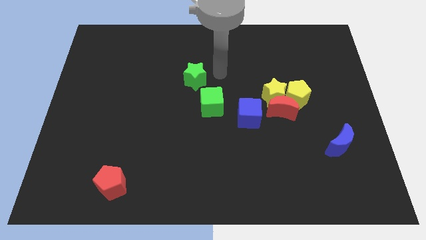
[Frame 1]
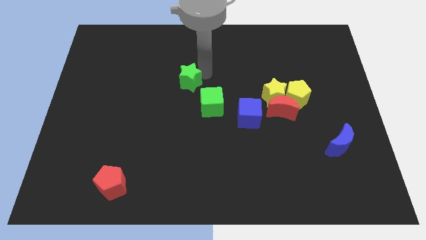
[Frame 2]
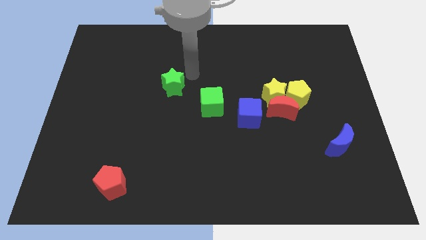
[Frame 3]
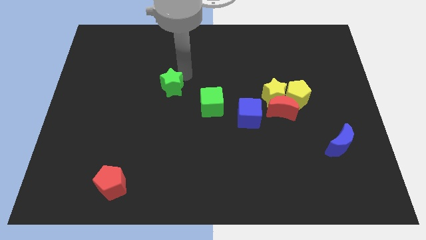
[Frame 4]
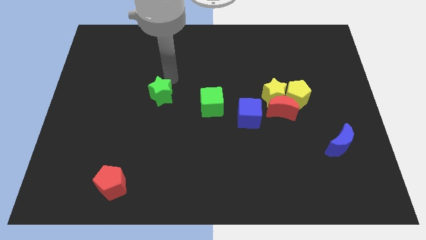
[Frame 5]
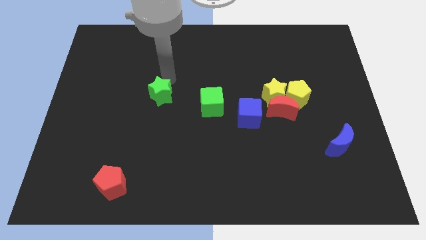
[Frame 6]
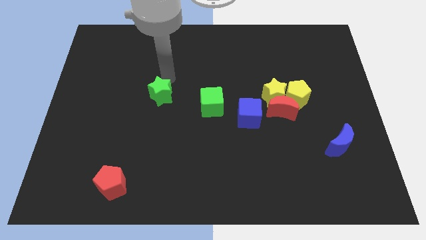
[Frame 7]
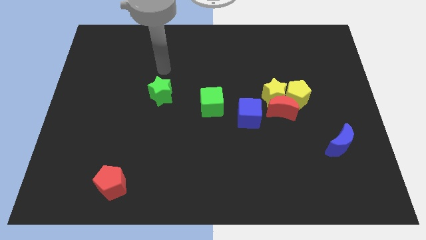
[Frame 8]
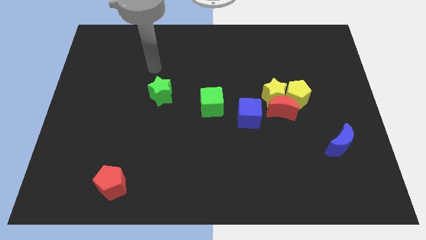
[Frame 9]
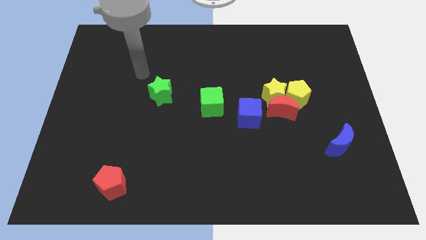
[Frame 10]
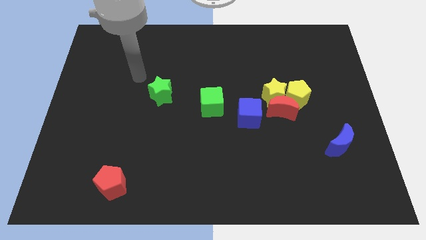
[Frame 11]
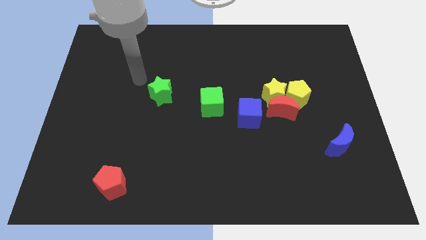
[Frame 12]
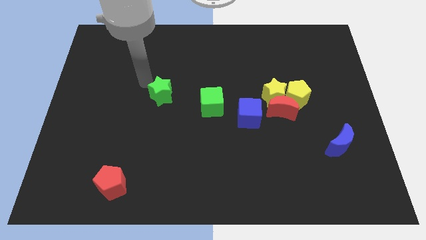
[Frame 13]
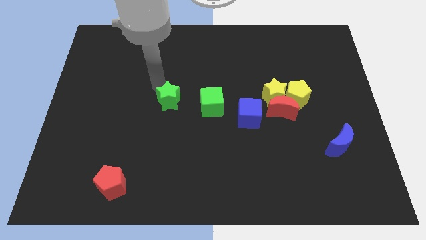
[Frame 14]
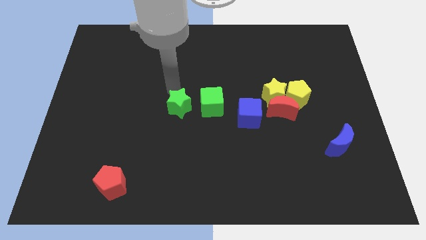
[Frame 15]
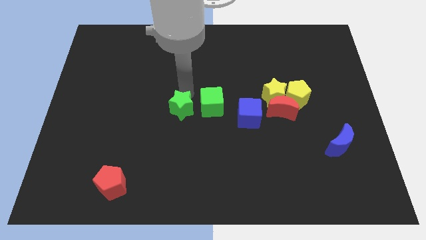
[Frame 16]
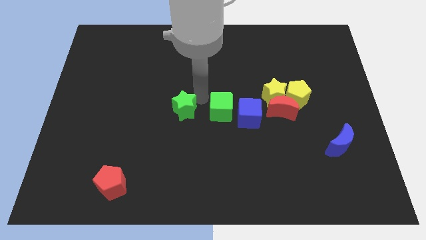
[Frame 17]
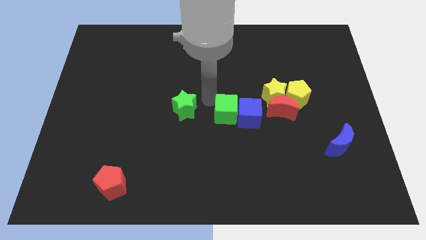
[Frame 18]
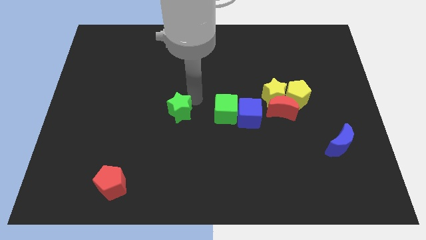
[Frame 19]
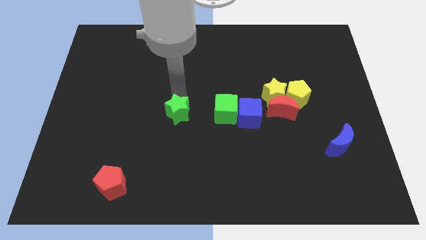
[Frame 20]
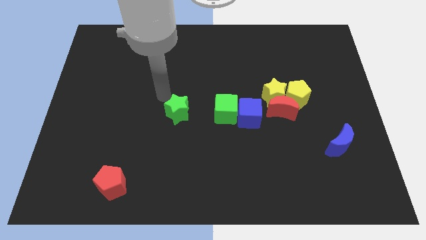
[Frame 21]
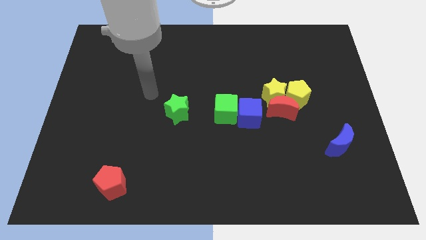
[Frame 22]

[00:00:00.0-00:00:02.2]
slide green star to the left of green cube

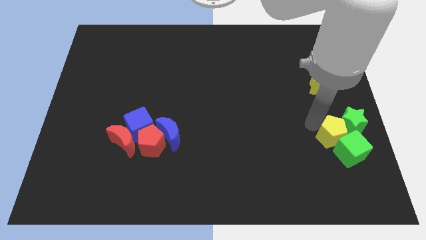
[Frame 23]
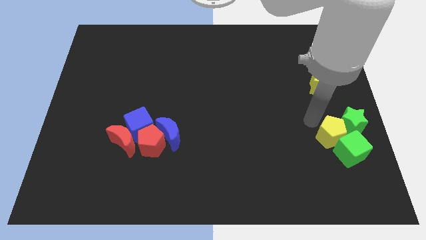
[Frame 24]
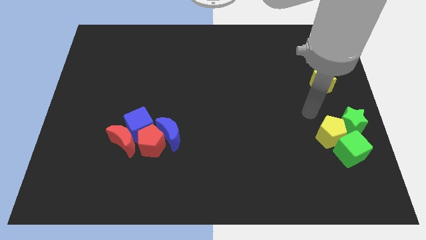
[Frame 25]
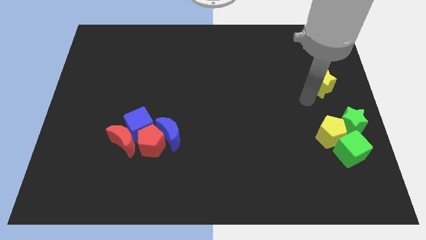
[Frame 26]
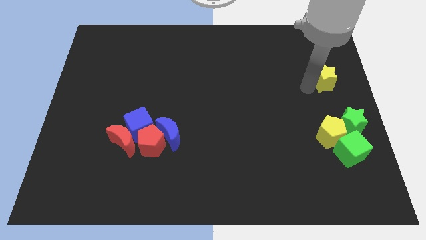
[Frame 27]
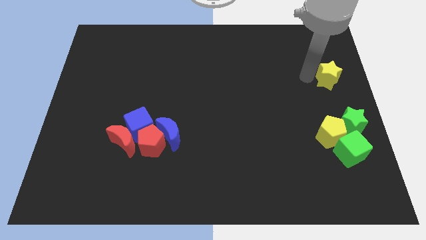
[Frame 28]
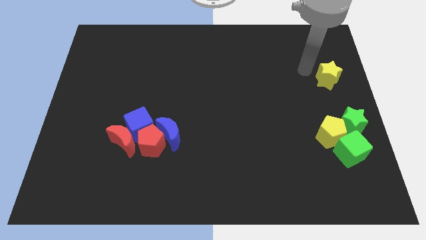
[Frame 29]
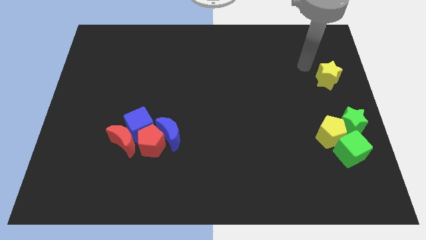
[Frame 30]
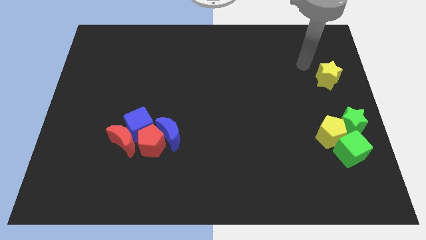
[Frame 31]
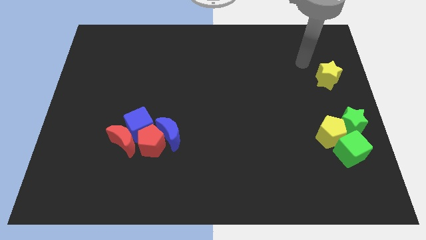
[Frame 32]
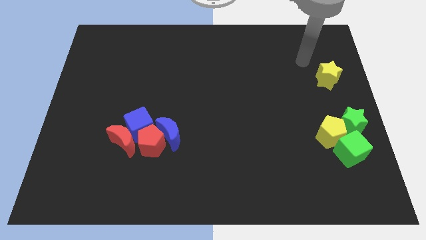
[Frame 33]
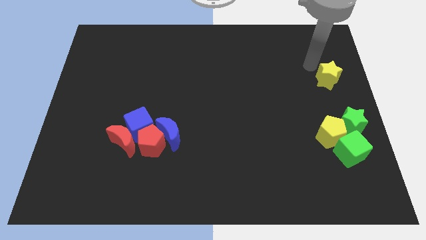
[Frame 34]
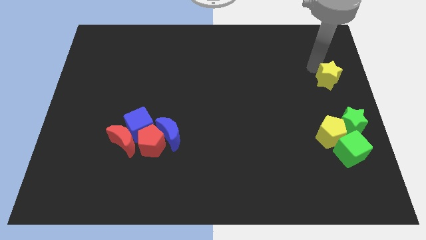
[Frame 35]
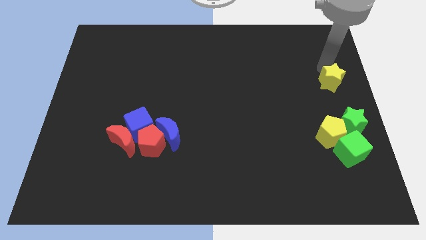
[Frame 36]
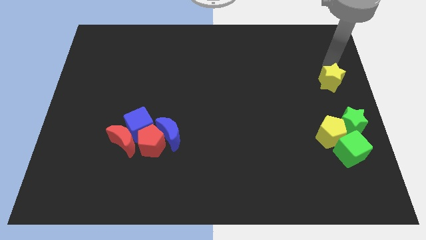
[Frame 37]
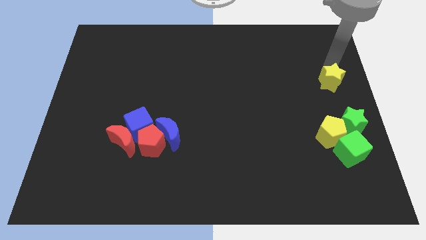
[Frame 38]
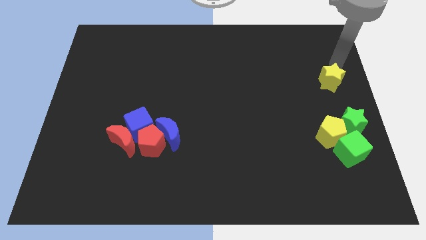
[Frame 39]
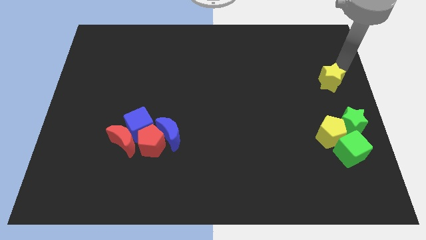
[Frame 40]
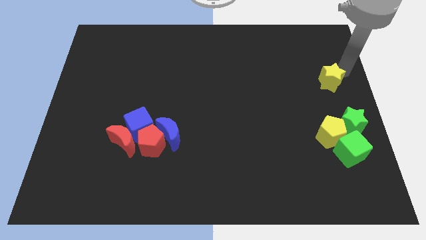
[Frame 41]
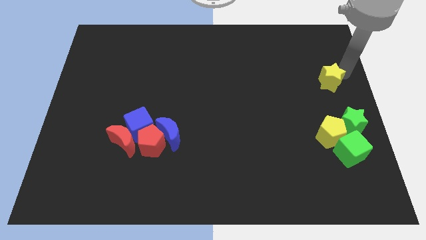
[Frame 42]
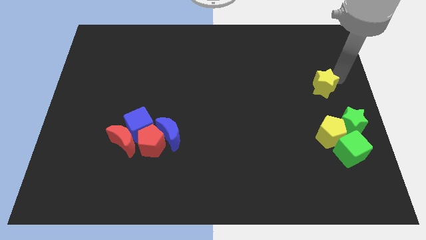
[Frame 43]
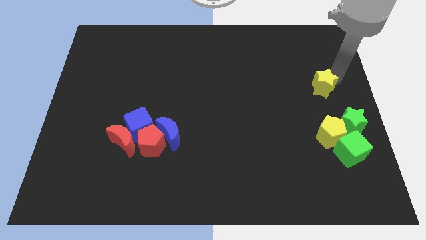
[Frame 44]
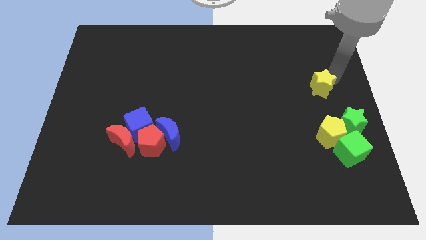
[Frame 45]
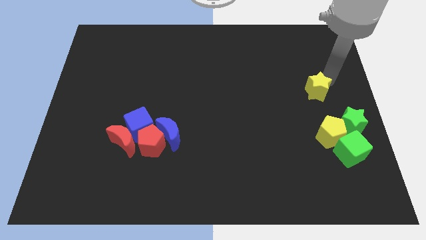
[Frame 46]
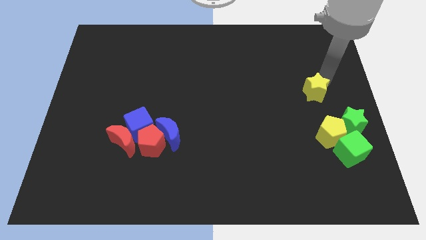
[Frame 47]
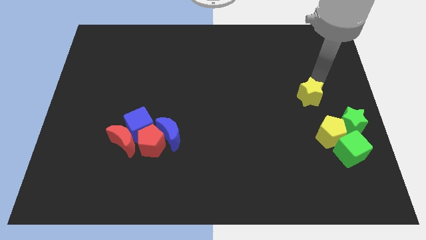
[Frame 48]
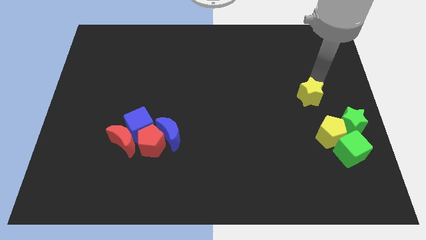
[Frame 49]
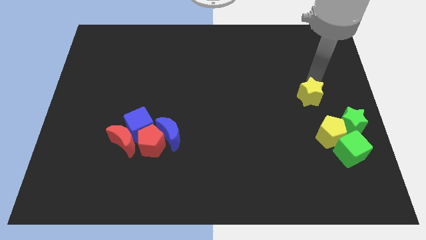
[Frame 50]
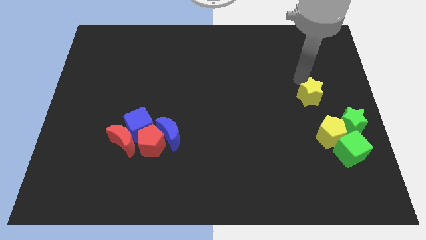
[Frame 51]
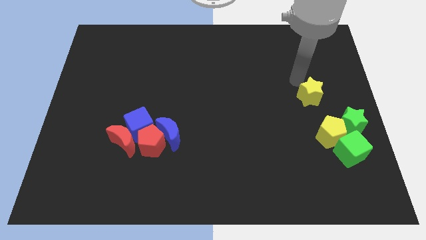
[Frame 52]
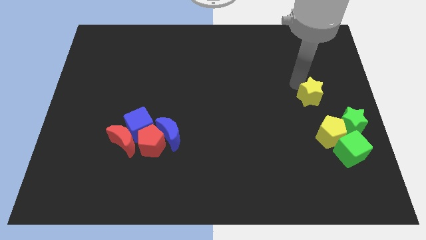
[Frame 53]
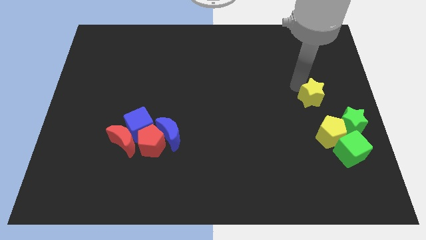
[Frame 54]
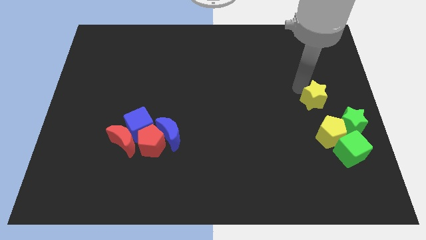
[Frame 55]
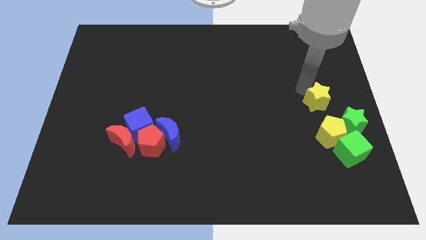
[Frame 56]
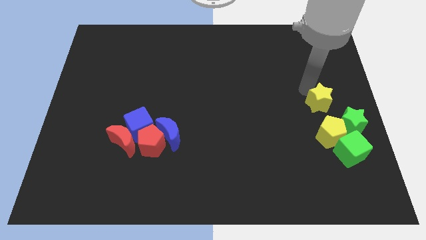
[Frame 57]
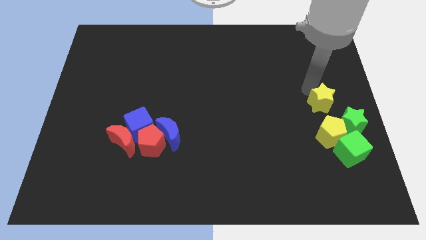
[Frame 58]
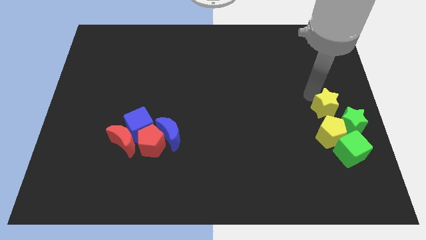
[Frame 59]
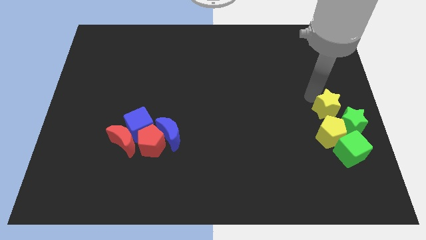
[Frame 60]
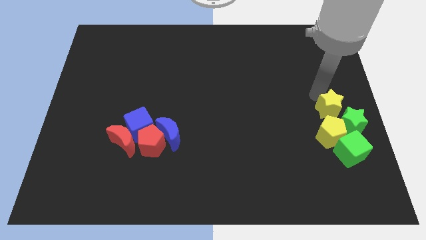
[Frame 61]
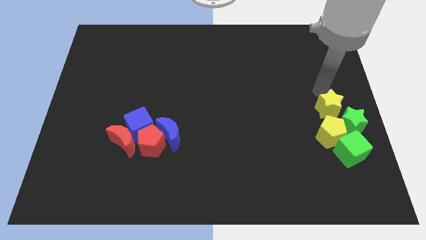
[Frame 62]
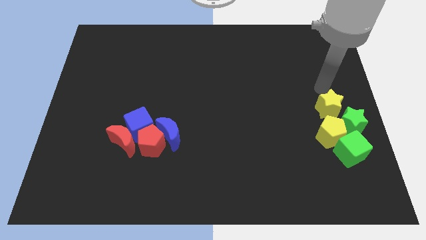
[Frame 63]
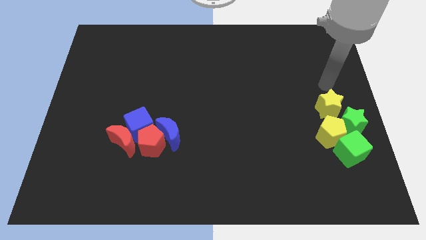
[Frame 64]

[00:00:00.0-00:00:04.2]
move the yellow star into the yellow pentagon

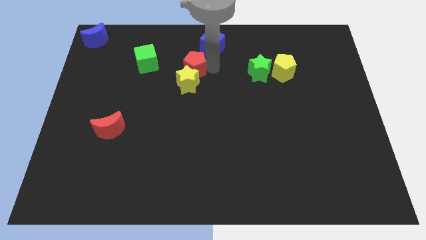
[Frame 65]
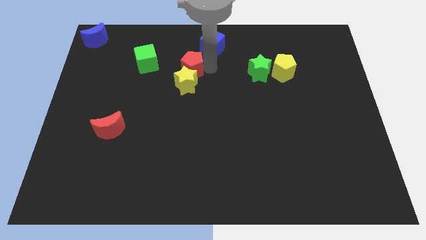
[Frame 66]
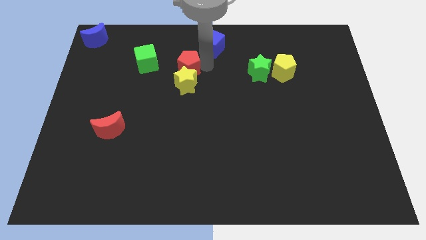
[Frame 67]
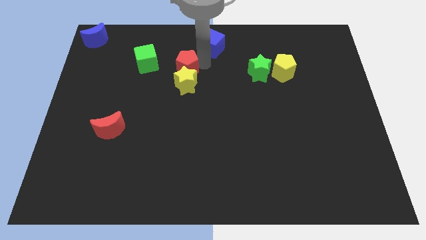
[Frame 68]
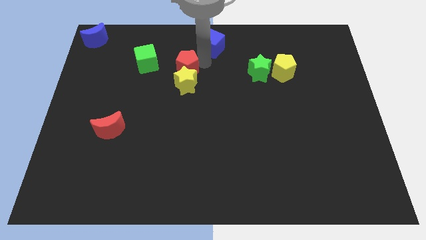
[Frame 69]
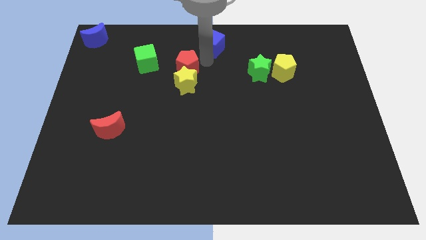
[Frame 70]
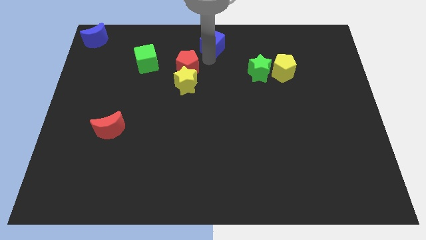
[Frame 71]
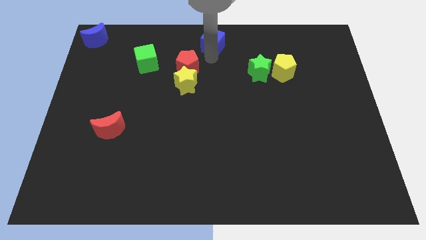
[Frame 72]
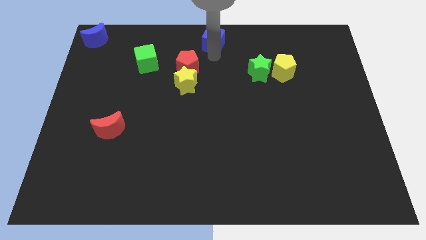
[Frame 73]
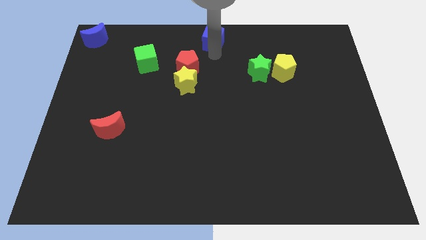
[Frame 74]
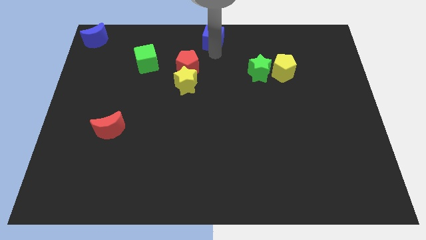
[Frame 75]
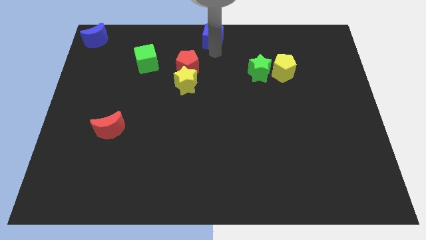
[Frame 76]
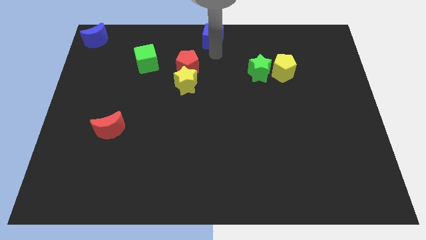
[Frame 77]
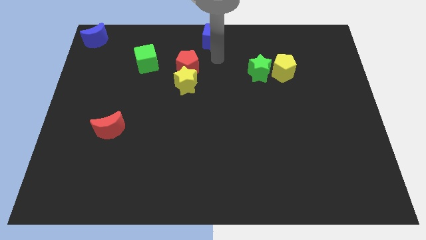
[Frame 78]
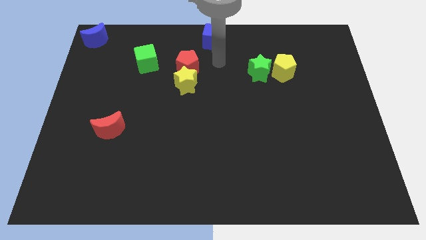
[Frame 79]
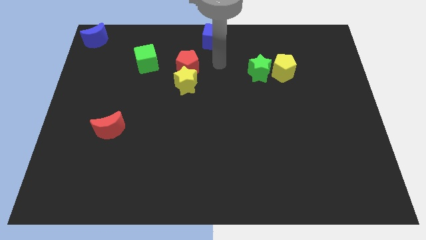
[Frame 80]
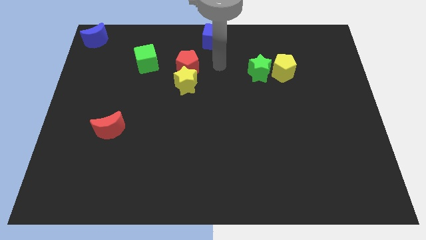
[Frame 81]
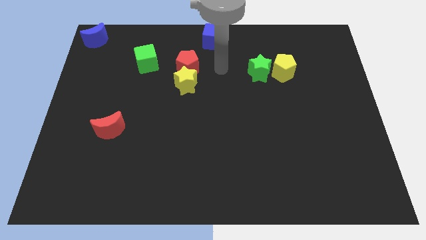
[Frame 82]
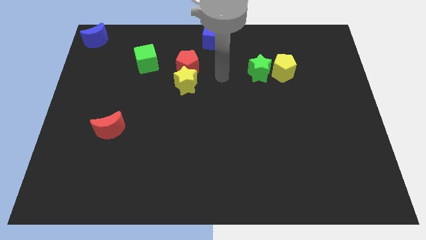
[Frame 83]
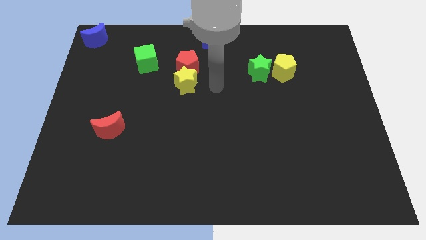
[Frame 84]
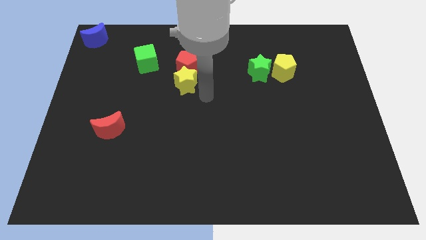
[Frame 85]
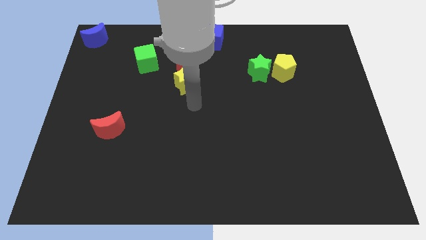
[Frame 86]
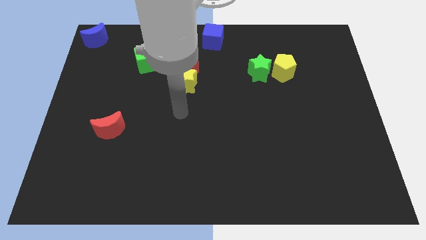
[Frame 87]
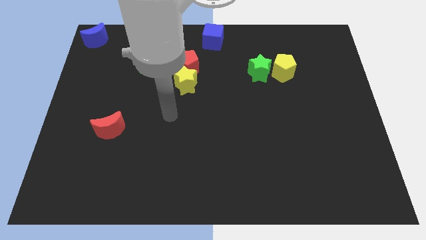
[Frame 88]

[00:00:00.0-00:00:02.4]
put the blue cube at the top center of the board

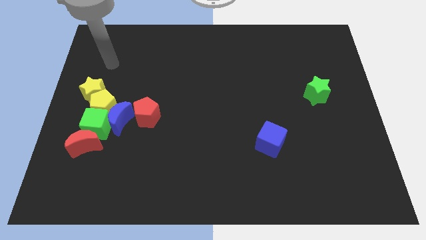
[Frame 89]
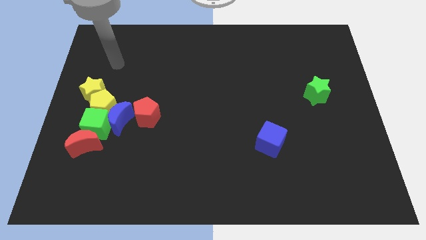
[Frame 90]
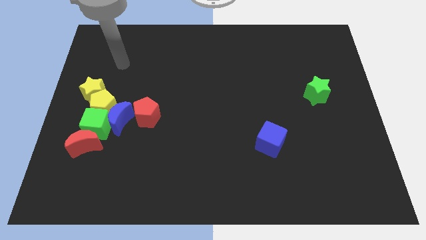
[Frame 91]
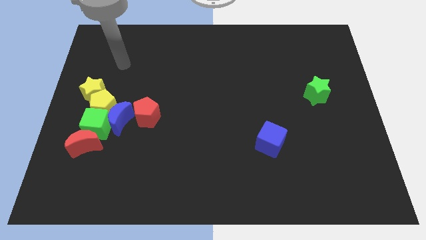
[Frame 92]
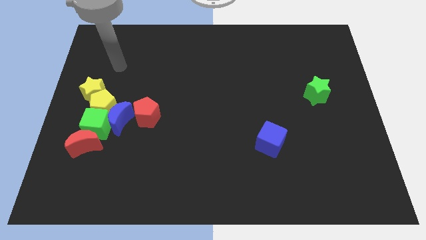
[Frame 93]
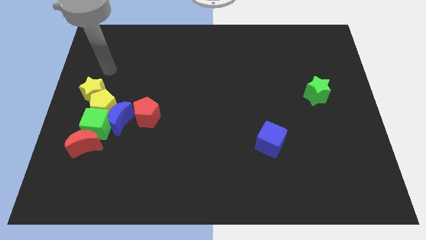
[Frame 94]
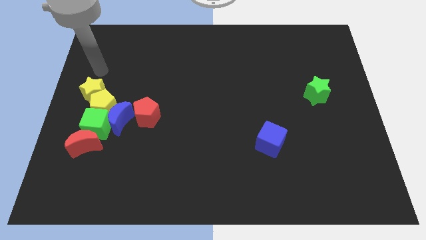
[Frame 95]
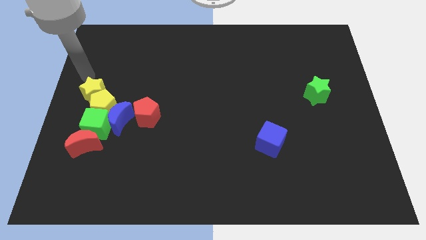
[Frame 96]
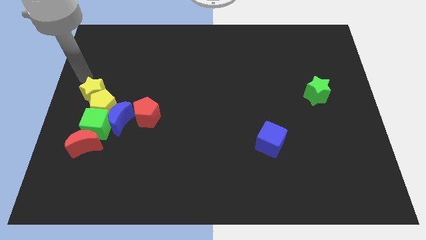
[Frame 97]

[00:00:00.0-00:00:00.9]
place your arm above yellow star
